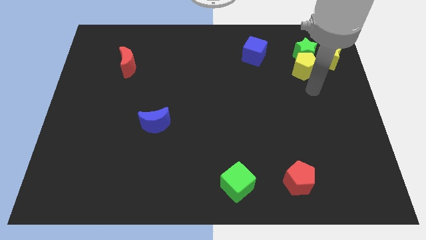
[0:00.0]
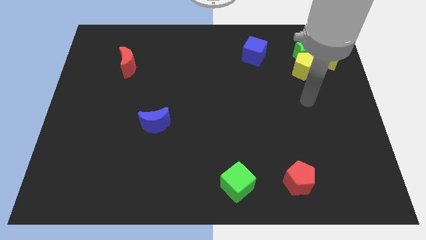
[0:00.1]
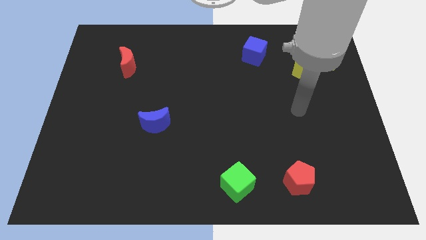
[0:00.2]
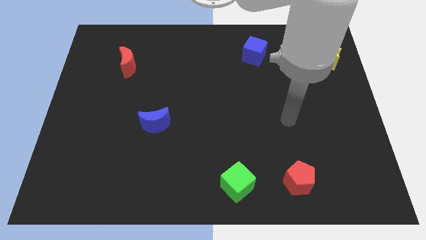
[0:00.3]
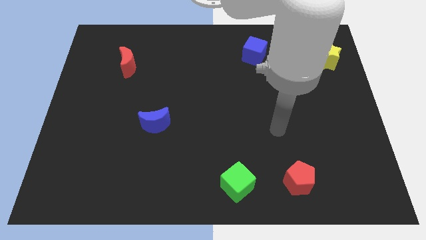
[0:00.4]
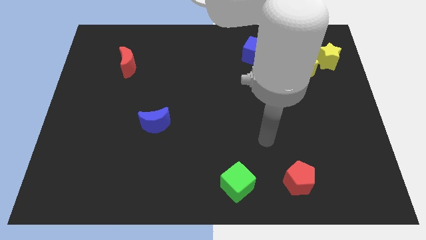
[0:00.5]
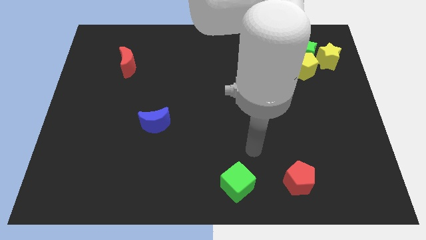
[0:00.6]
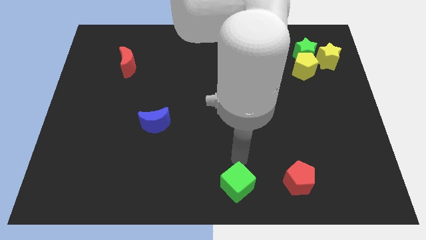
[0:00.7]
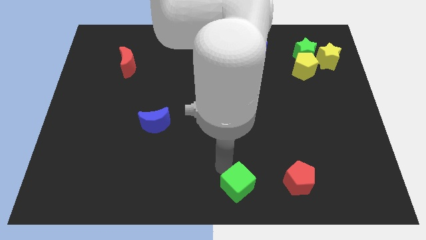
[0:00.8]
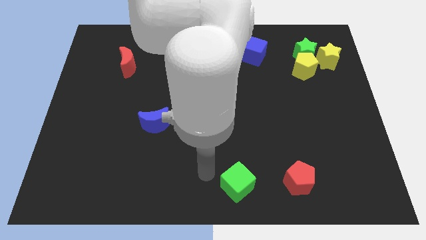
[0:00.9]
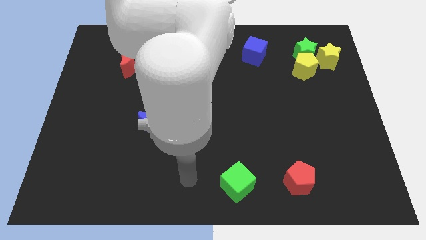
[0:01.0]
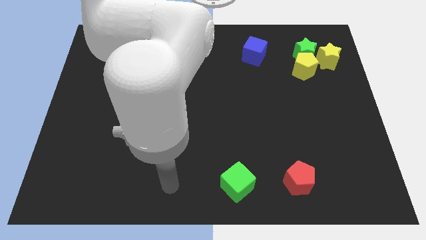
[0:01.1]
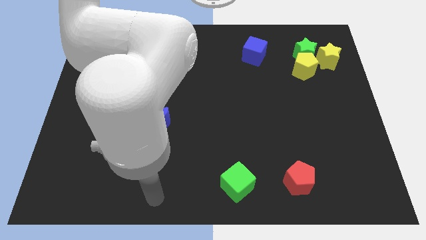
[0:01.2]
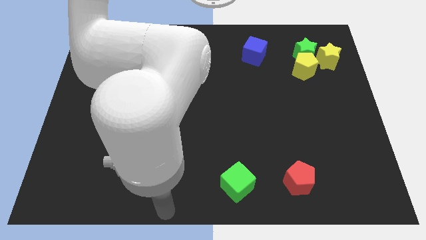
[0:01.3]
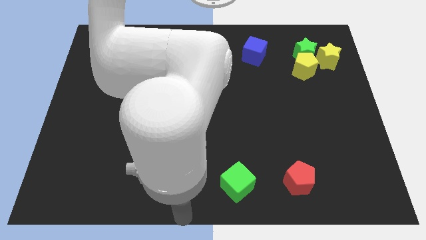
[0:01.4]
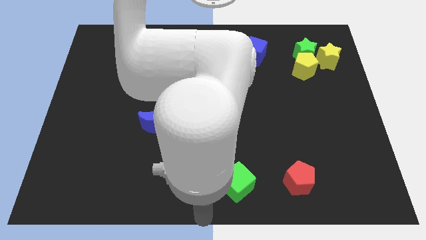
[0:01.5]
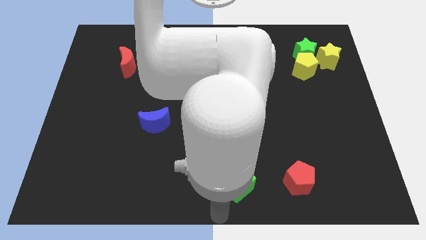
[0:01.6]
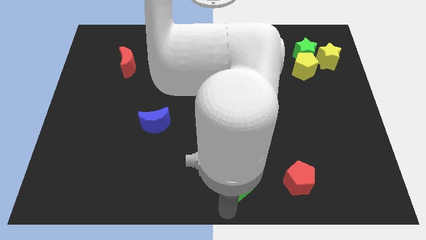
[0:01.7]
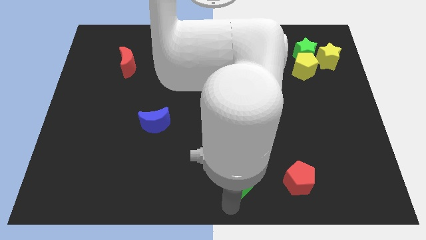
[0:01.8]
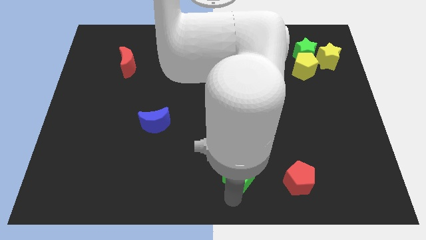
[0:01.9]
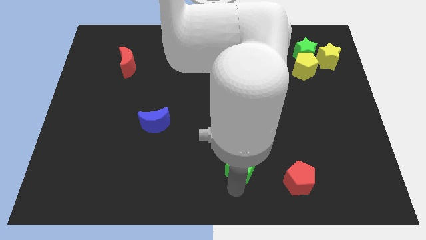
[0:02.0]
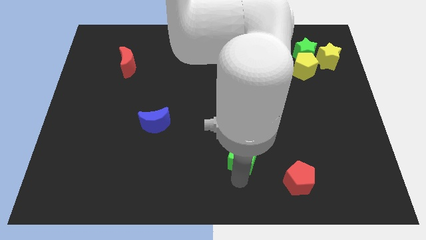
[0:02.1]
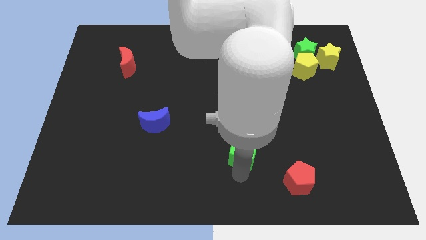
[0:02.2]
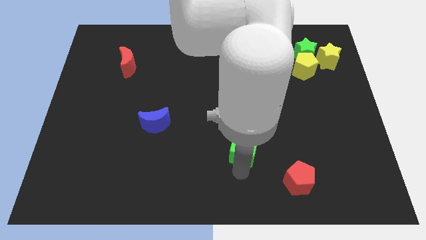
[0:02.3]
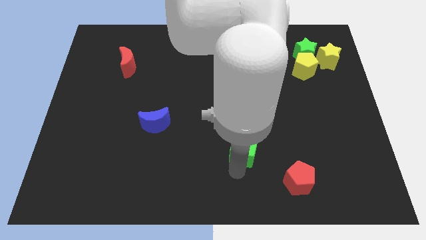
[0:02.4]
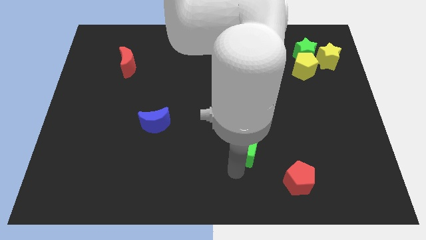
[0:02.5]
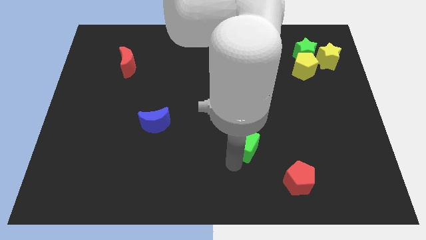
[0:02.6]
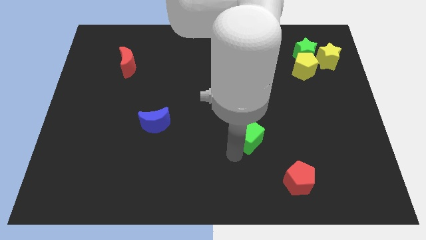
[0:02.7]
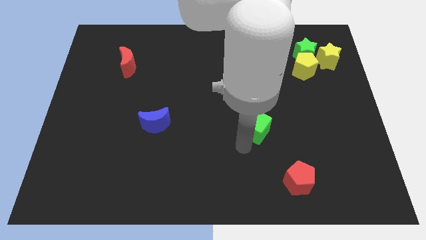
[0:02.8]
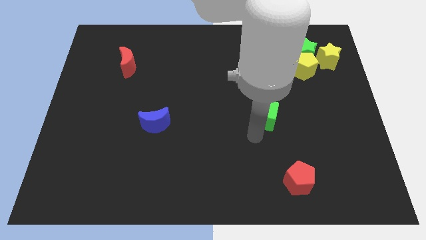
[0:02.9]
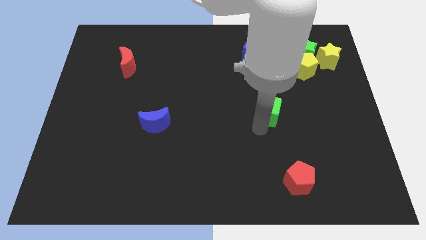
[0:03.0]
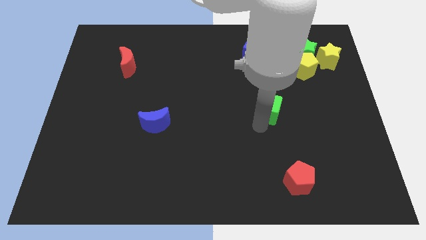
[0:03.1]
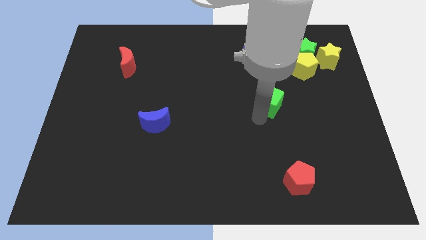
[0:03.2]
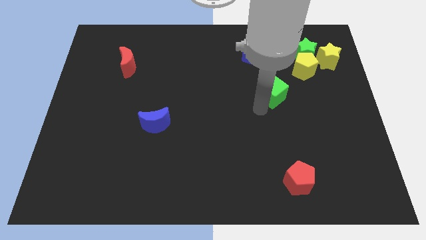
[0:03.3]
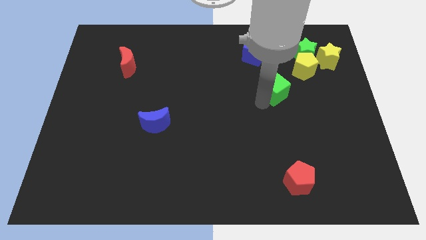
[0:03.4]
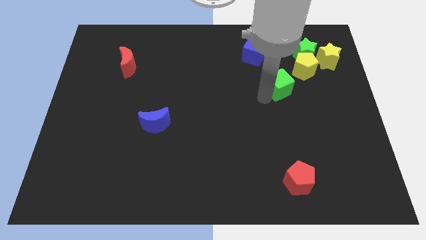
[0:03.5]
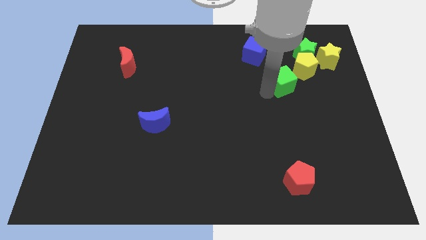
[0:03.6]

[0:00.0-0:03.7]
push the green cube diagonally to yellow pentagon

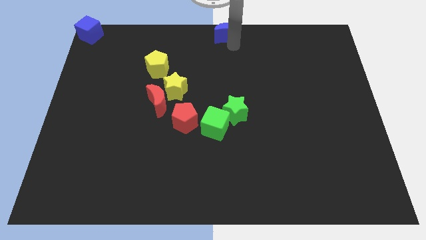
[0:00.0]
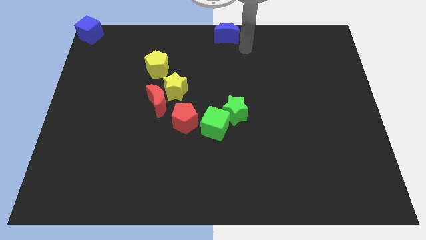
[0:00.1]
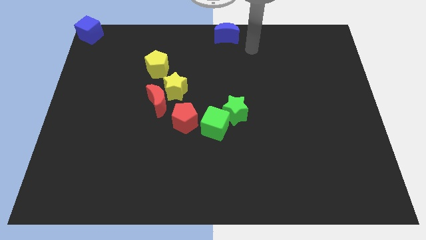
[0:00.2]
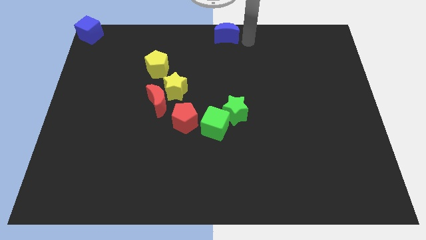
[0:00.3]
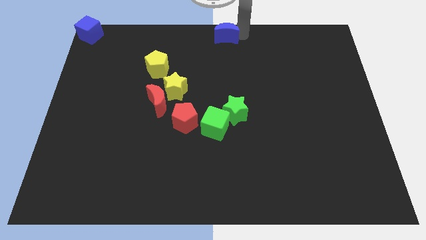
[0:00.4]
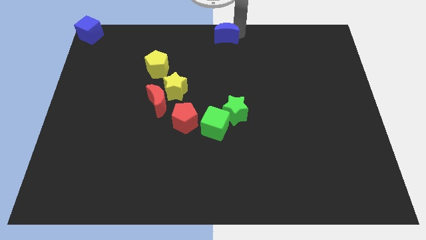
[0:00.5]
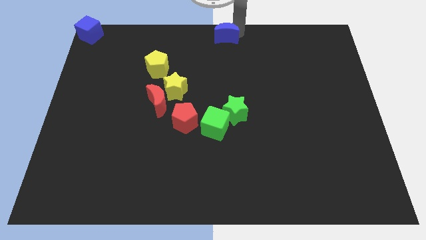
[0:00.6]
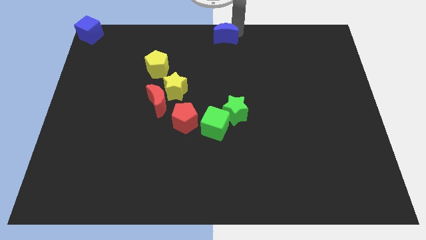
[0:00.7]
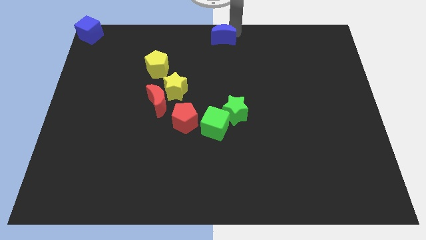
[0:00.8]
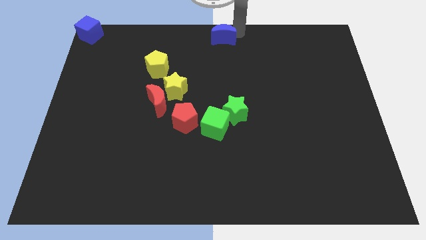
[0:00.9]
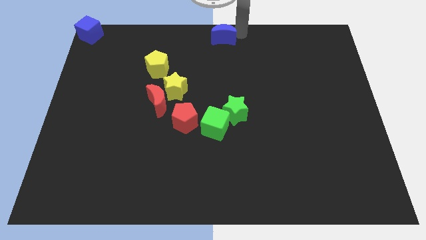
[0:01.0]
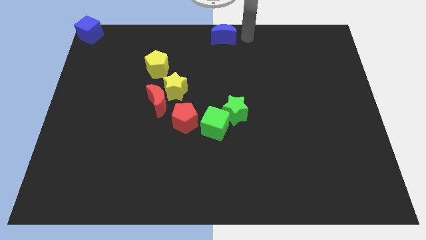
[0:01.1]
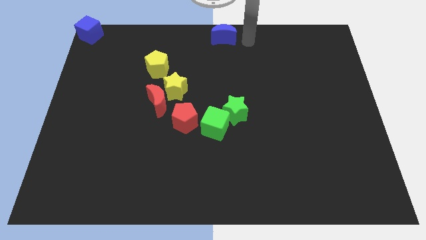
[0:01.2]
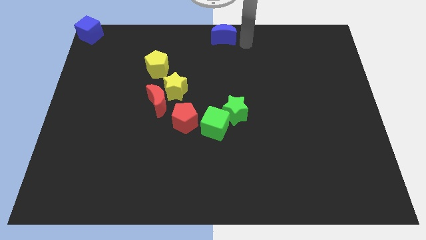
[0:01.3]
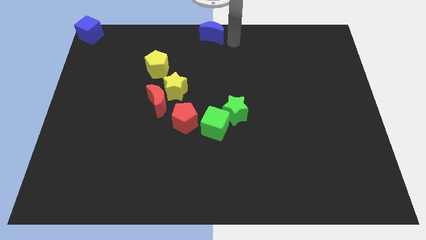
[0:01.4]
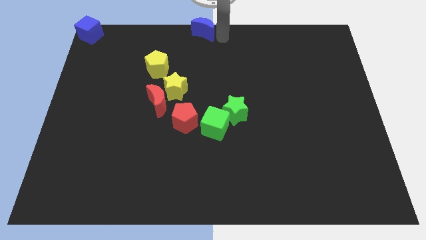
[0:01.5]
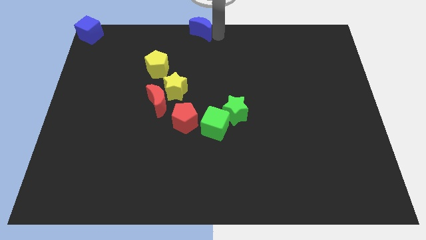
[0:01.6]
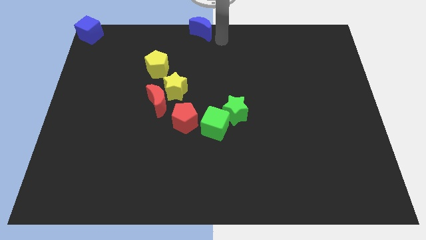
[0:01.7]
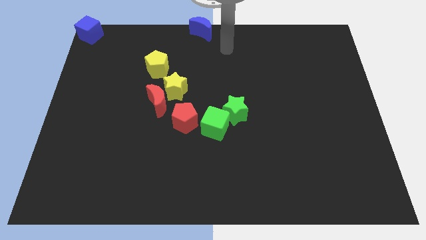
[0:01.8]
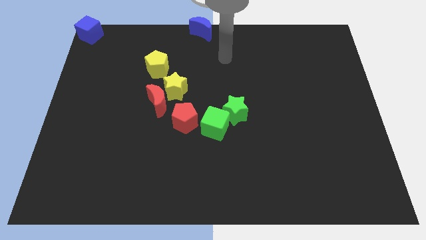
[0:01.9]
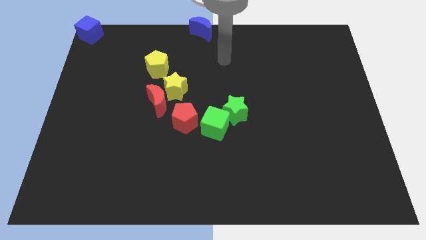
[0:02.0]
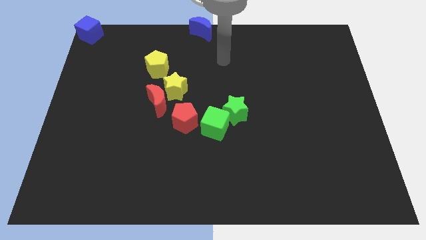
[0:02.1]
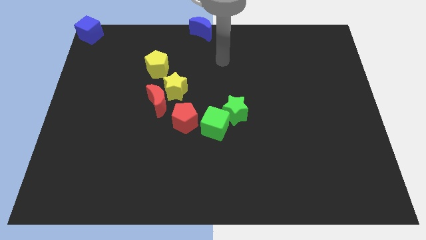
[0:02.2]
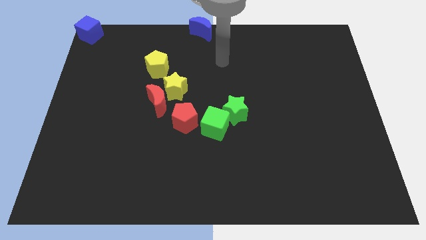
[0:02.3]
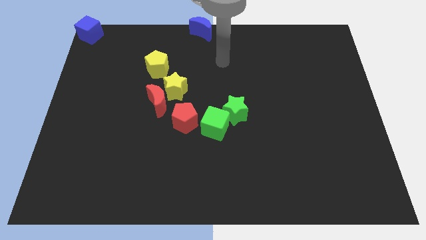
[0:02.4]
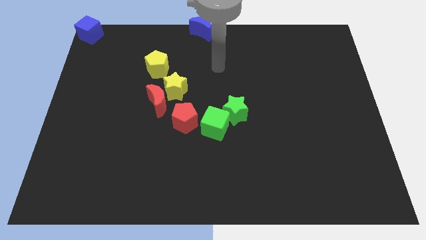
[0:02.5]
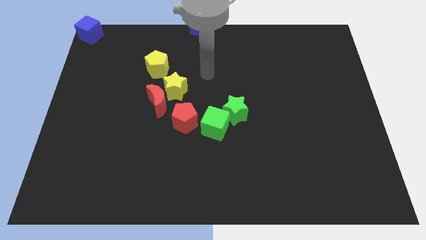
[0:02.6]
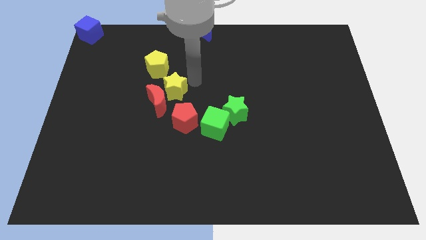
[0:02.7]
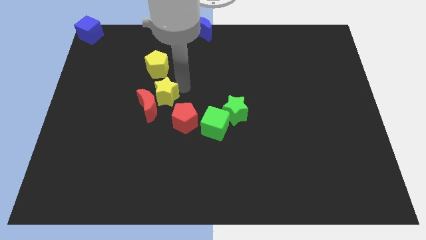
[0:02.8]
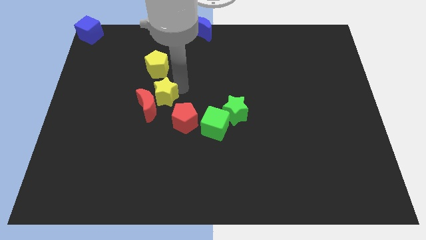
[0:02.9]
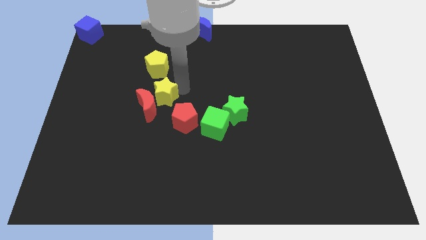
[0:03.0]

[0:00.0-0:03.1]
slightly push the red moon with a yellow star

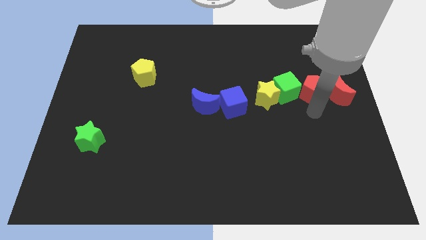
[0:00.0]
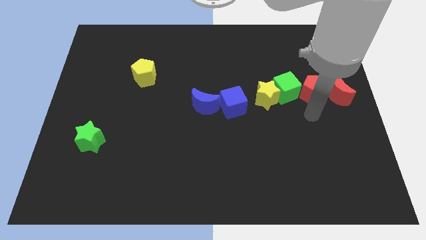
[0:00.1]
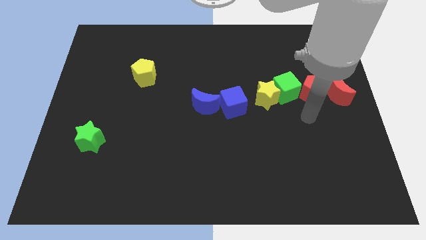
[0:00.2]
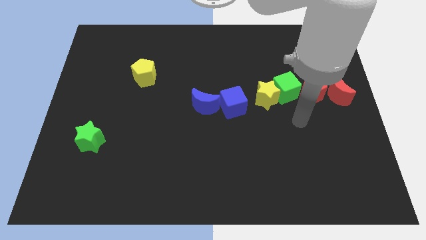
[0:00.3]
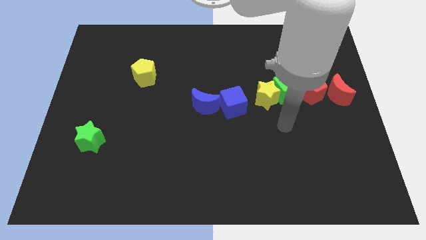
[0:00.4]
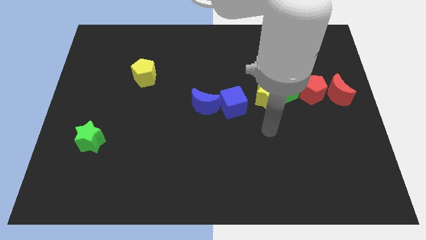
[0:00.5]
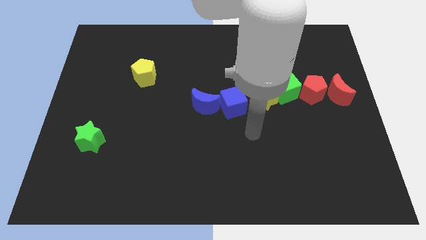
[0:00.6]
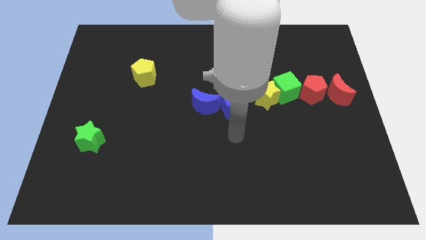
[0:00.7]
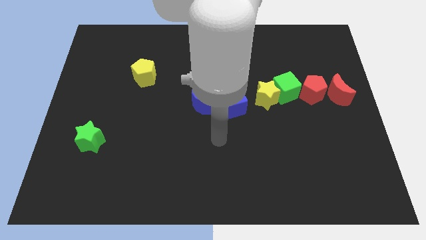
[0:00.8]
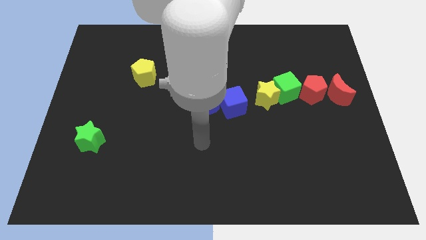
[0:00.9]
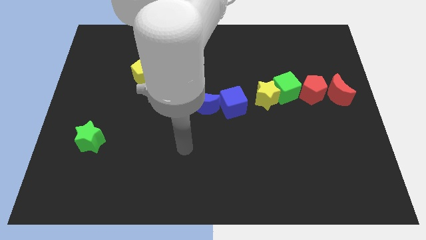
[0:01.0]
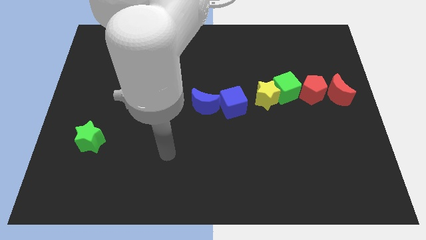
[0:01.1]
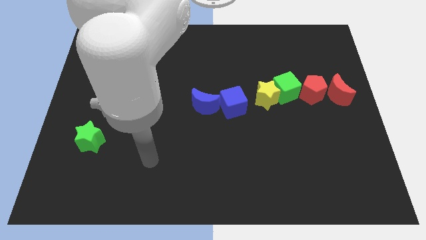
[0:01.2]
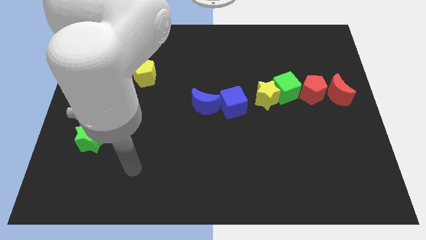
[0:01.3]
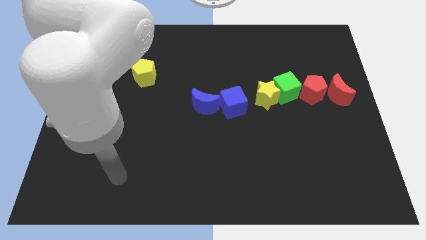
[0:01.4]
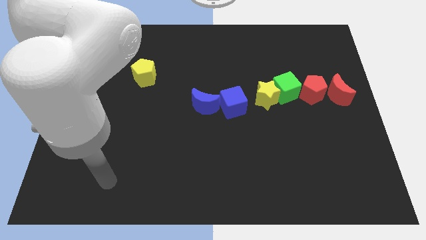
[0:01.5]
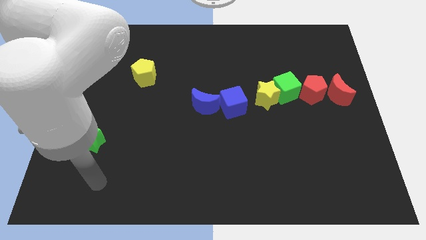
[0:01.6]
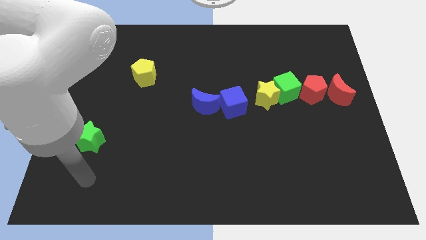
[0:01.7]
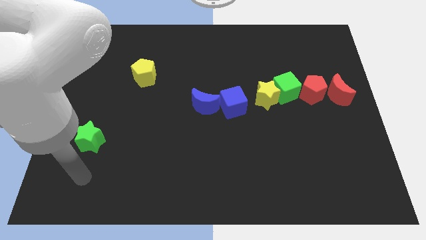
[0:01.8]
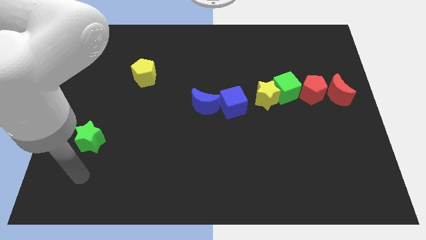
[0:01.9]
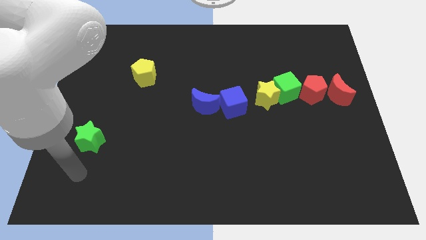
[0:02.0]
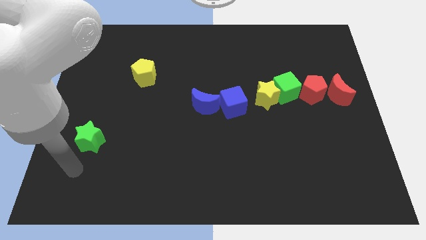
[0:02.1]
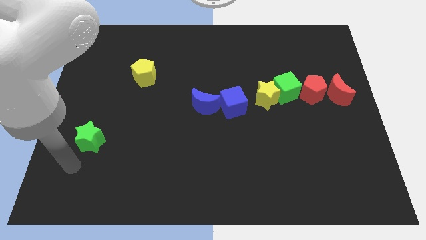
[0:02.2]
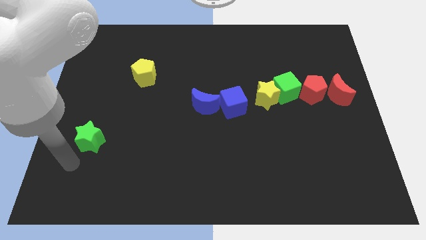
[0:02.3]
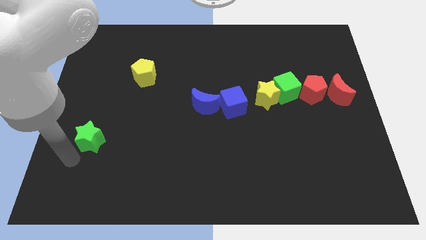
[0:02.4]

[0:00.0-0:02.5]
move your arm to the left bottom of the green star
